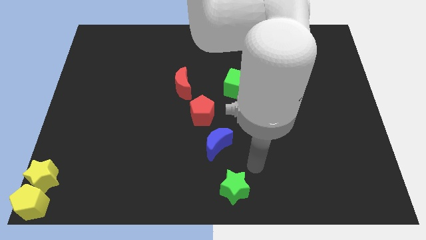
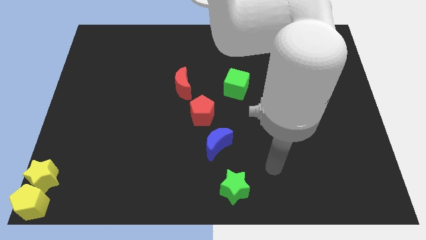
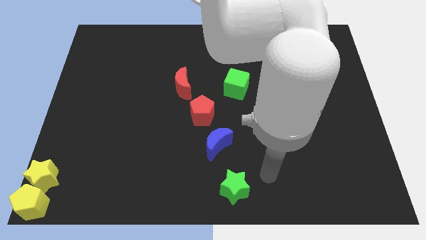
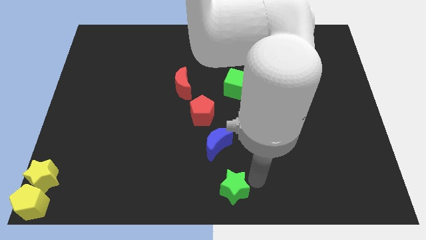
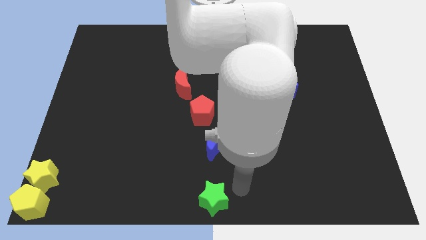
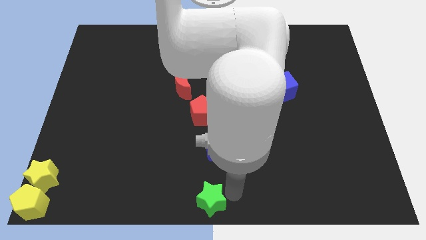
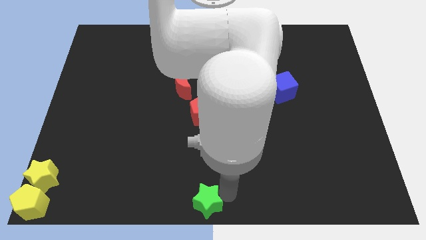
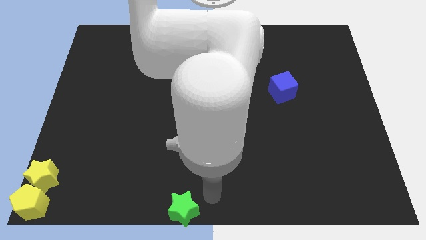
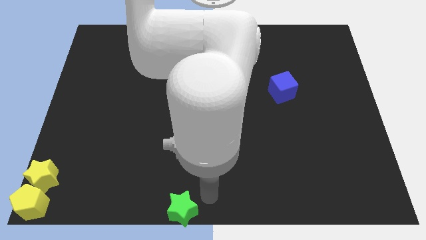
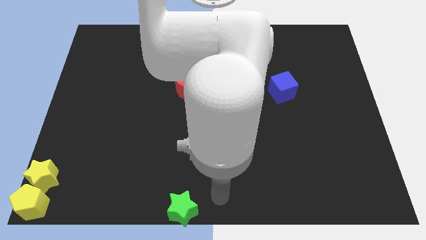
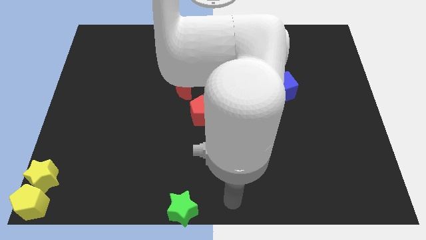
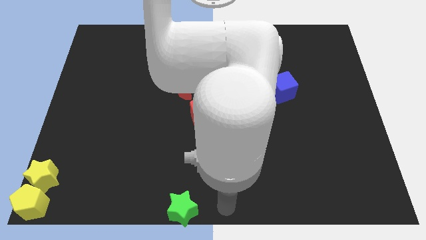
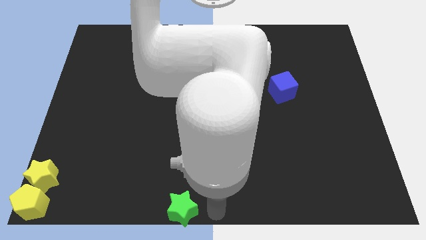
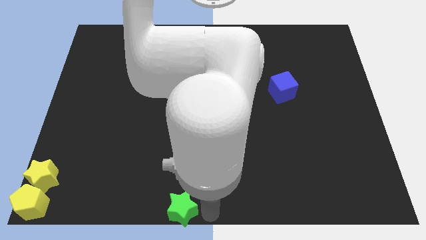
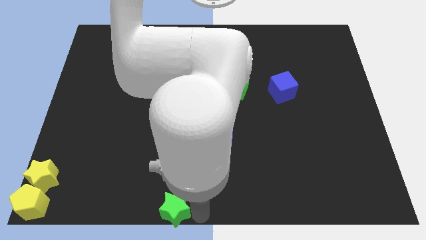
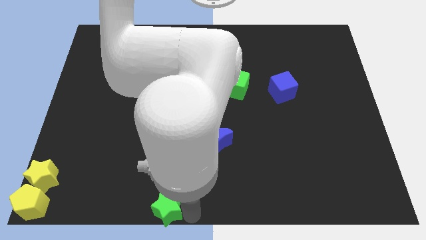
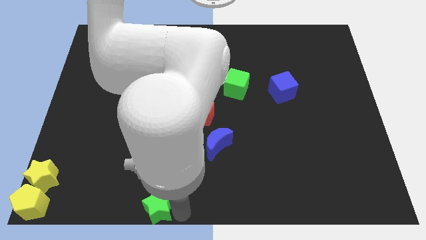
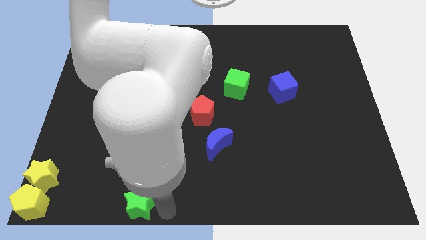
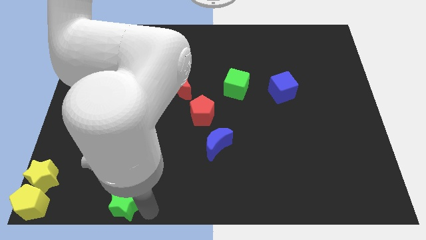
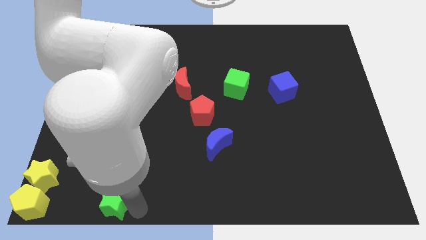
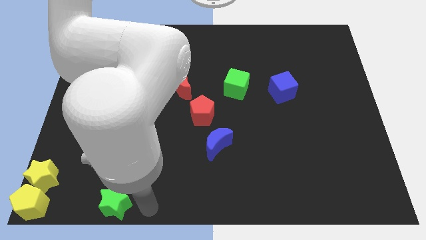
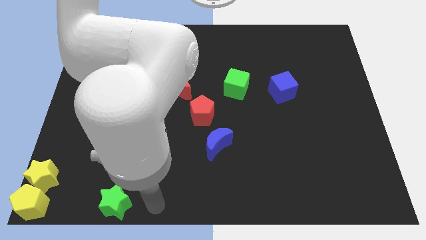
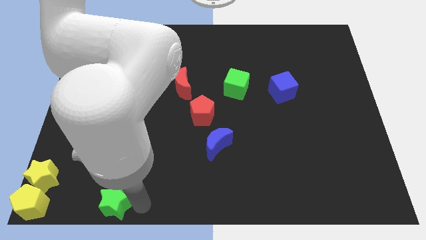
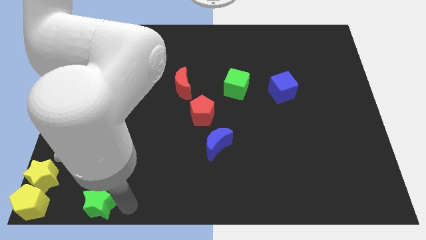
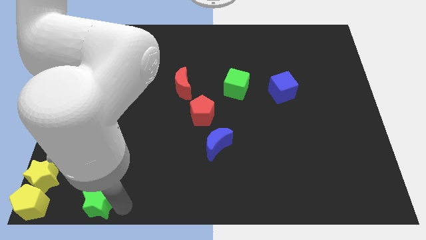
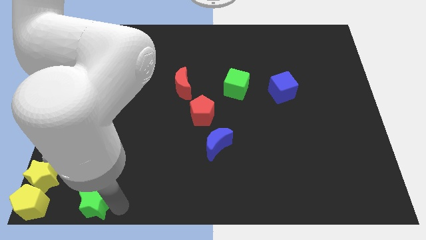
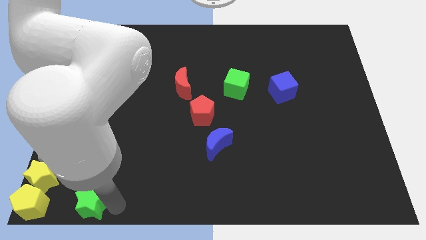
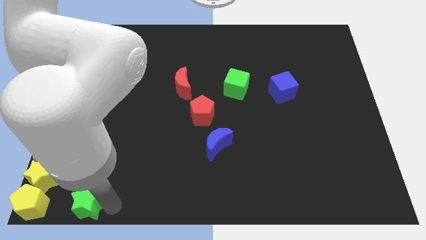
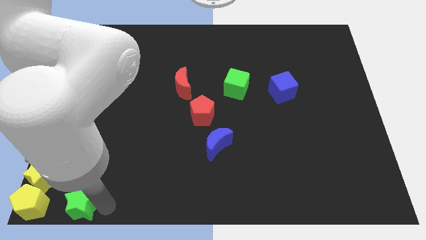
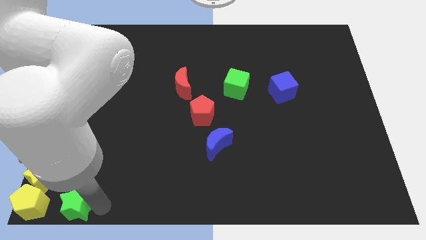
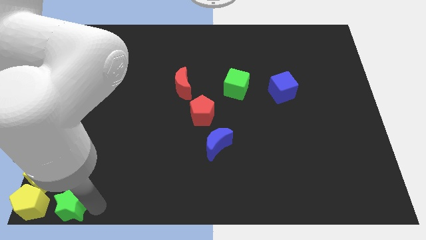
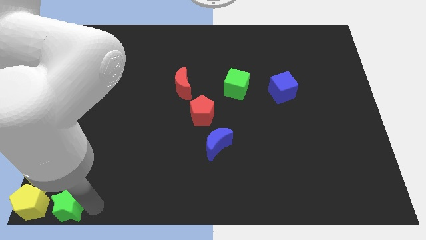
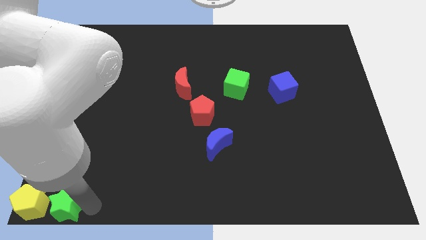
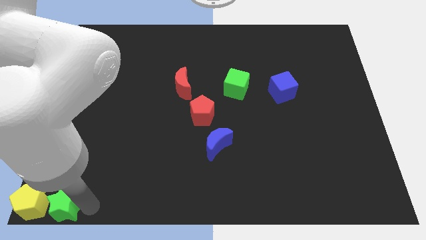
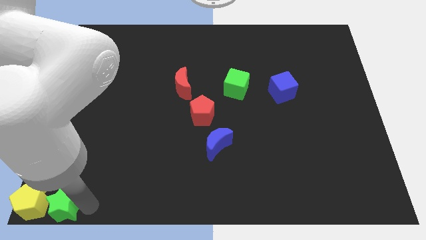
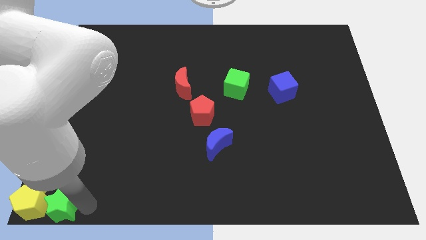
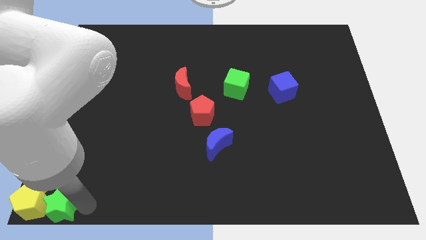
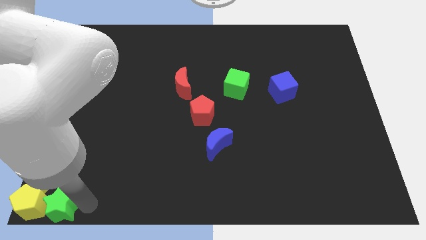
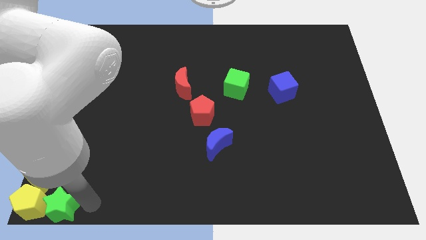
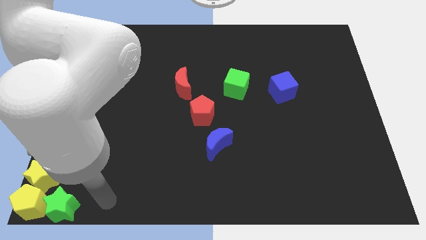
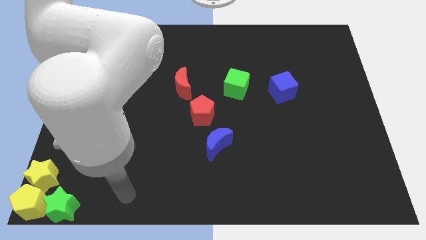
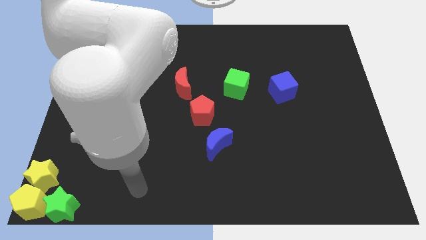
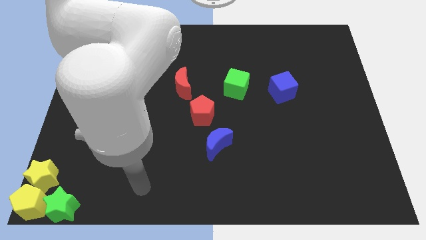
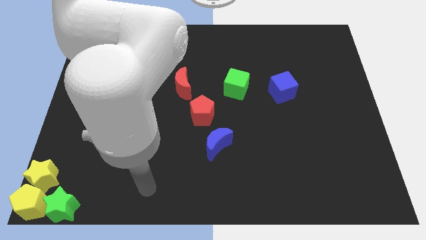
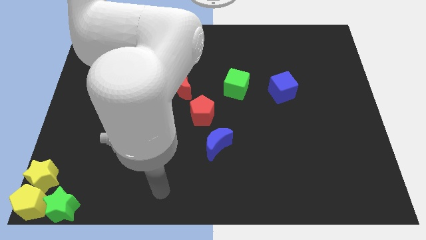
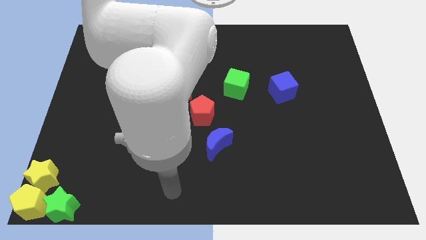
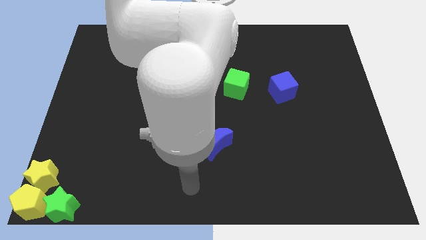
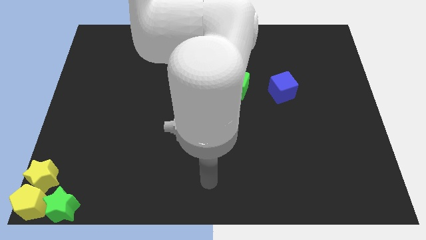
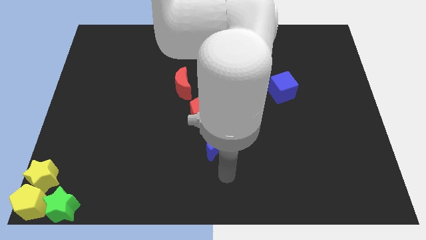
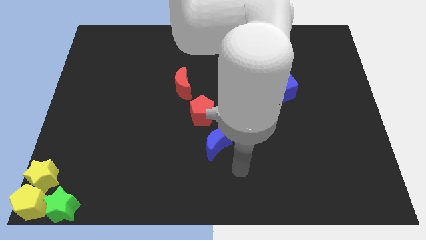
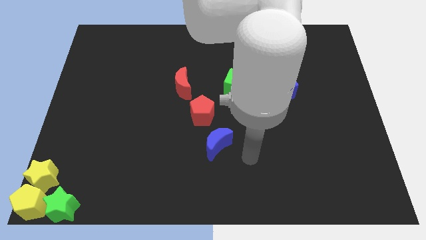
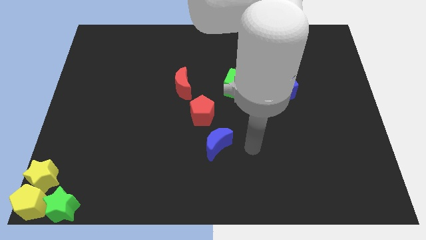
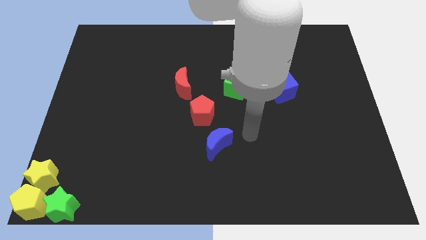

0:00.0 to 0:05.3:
move the green star diagonal to the yellow star

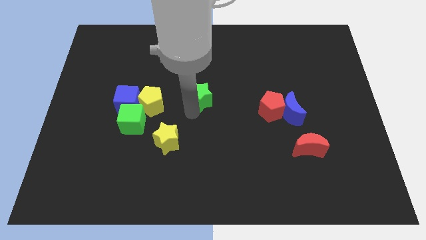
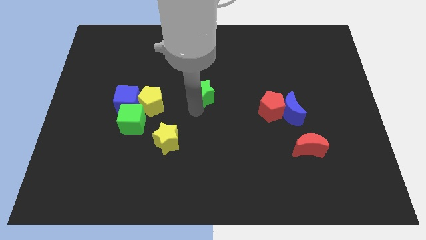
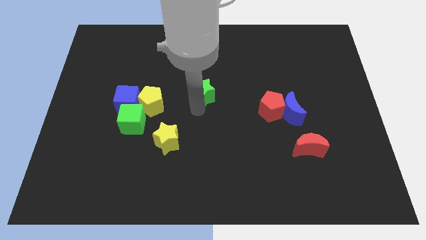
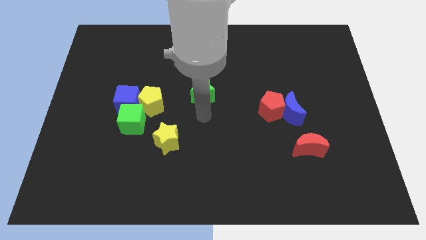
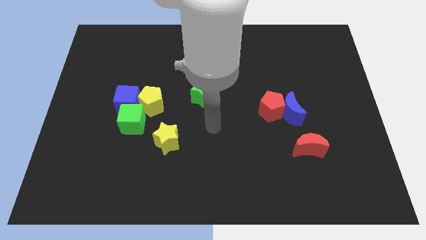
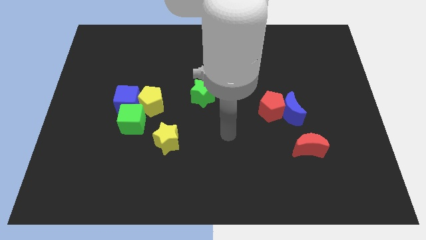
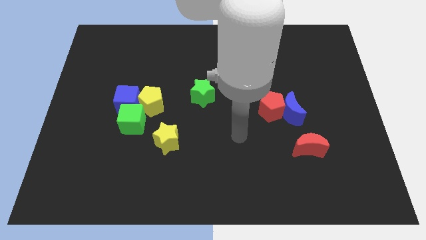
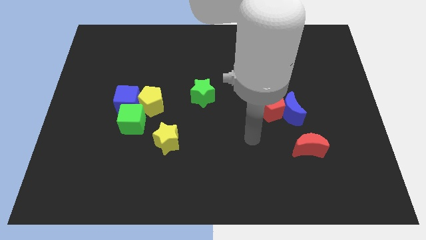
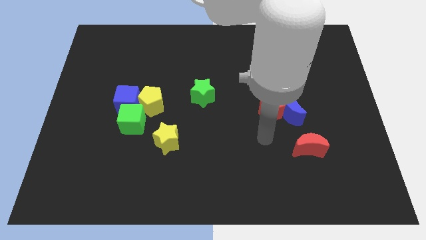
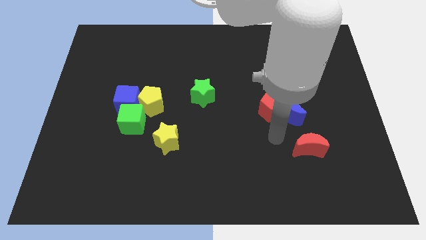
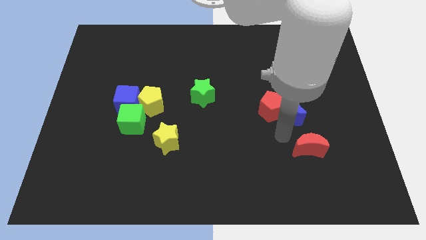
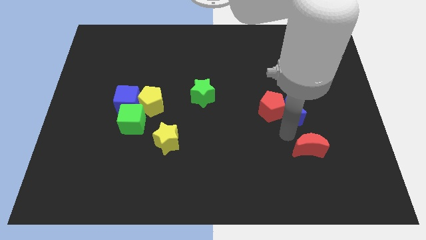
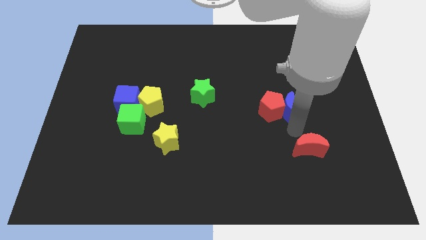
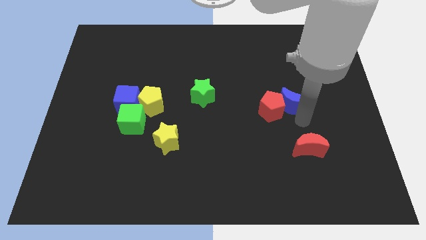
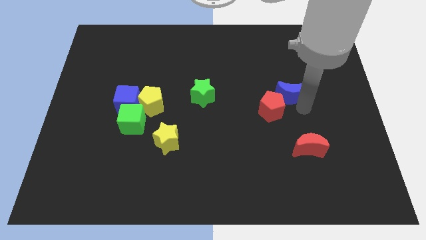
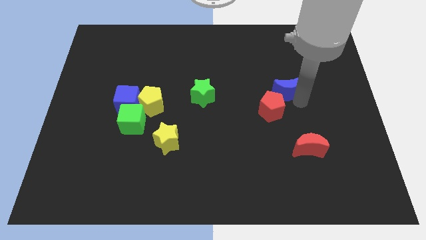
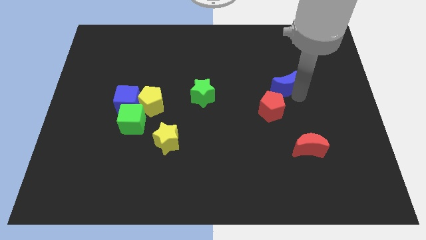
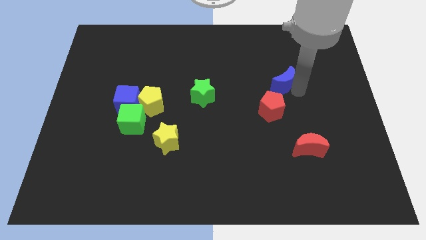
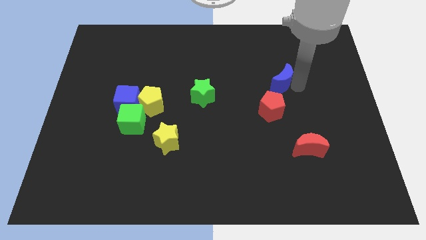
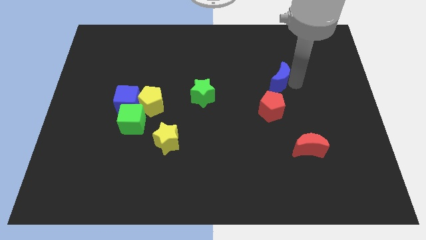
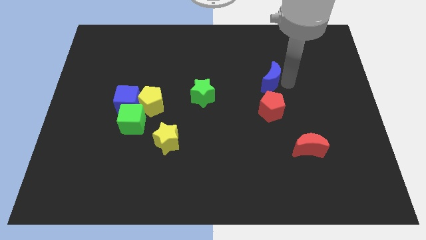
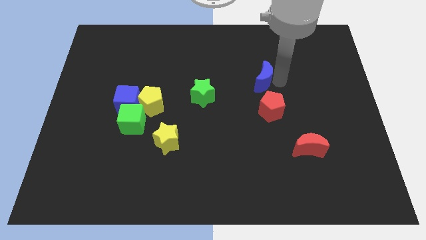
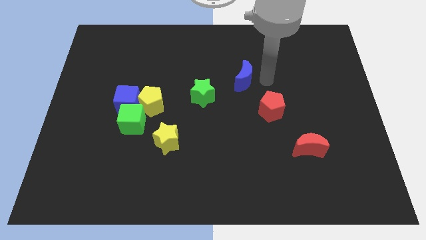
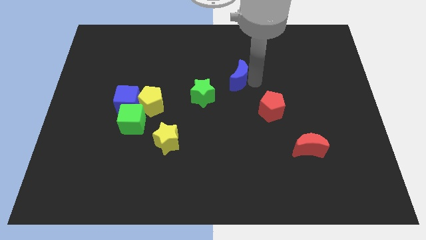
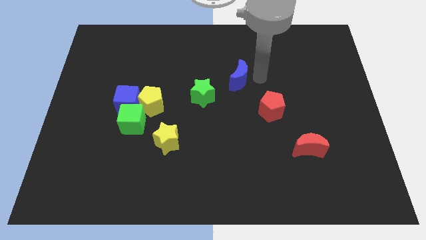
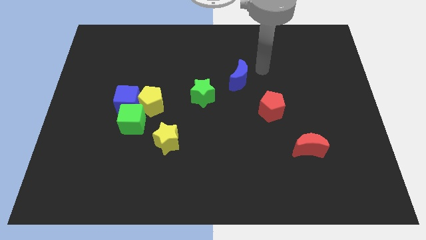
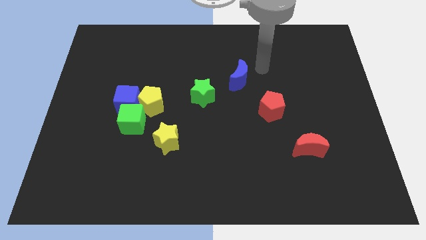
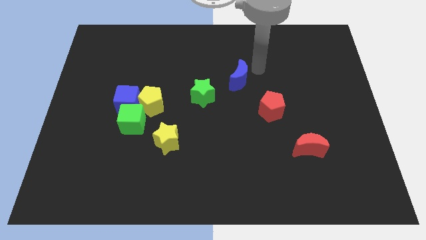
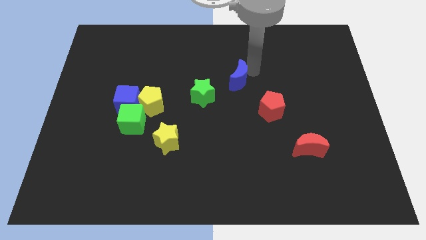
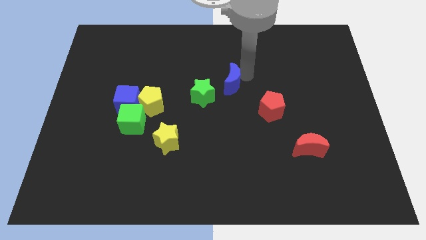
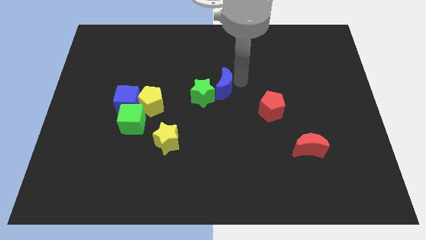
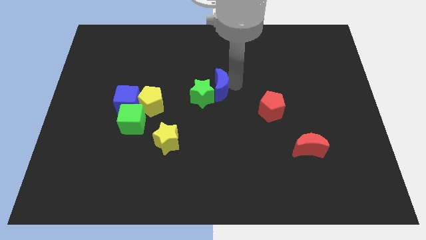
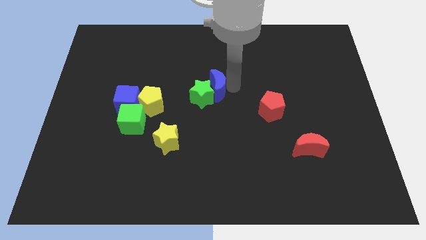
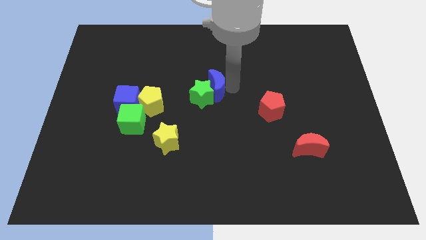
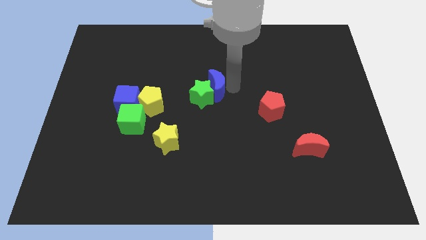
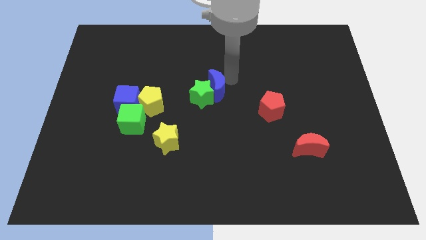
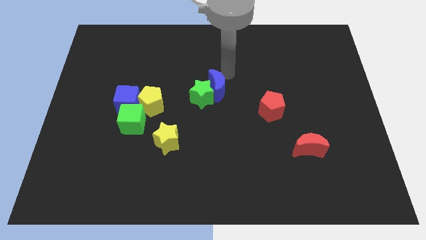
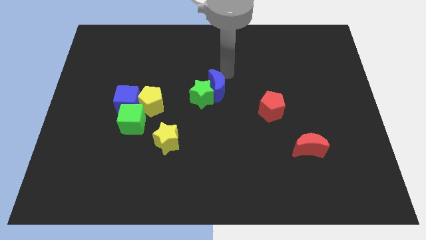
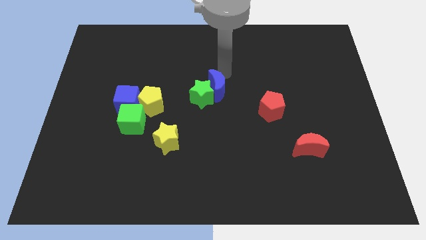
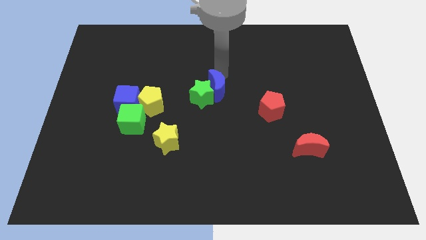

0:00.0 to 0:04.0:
move blue moon into the green star
